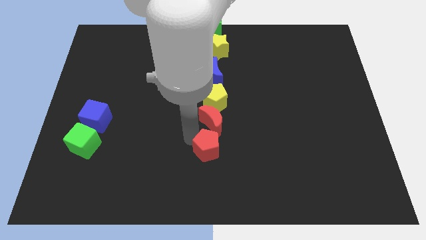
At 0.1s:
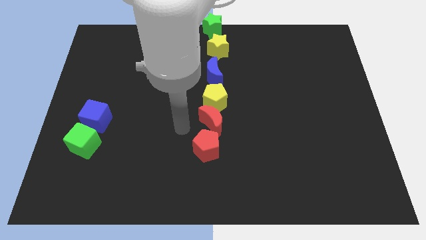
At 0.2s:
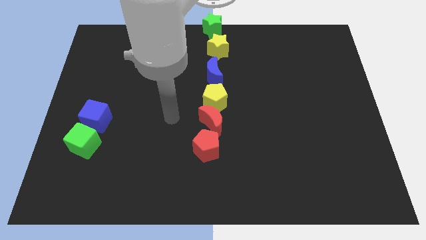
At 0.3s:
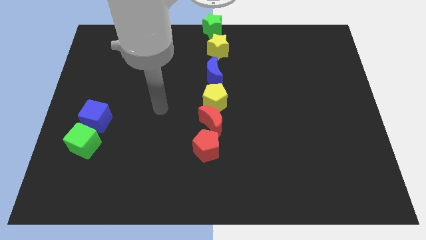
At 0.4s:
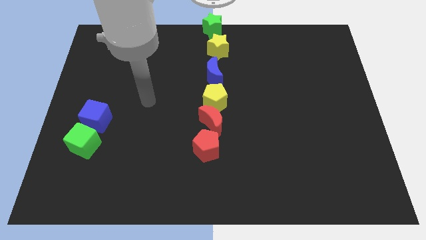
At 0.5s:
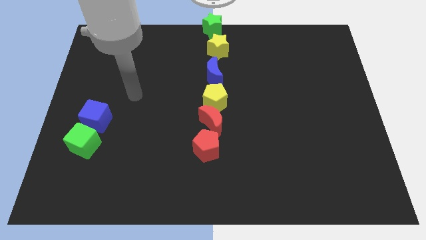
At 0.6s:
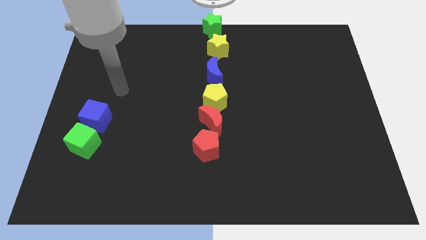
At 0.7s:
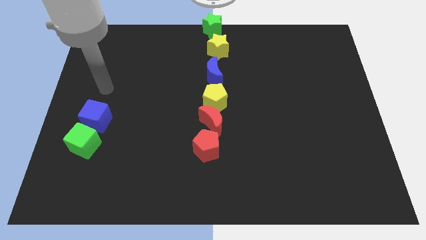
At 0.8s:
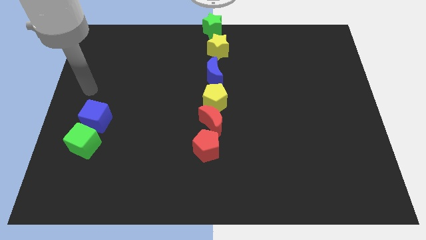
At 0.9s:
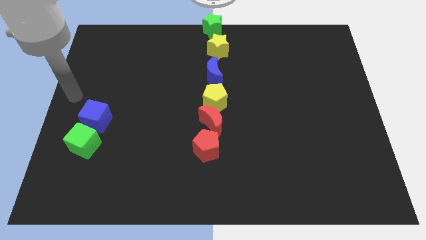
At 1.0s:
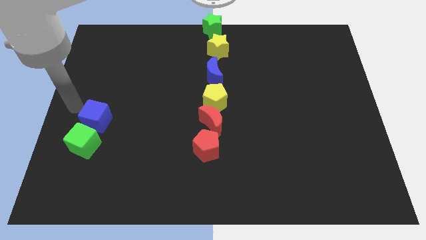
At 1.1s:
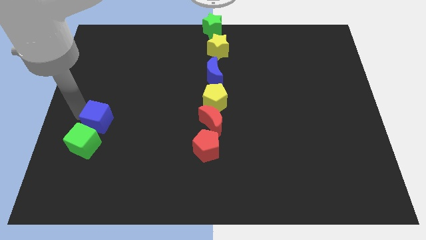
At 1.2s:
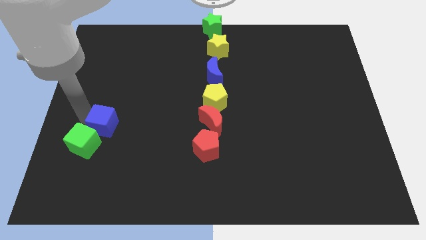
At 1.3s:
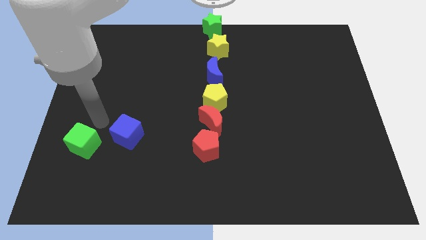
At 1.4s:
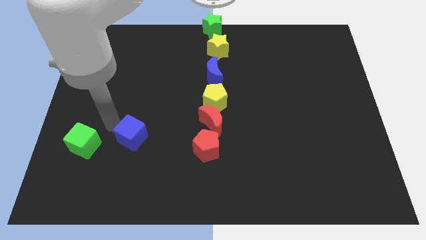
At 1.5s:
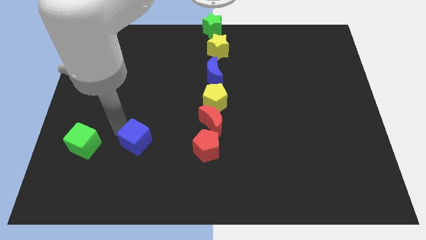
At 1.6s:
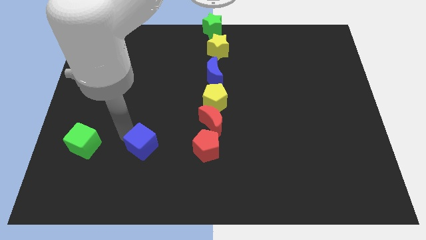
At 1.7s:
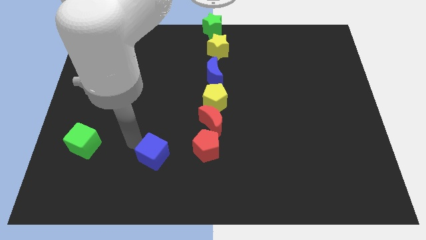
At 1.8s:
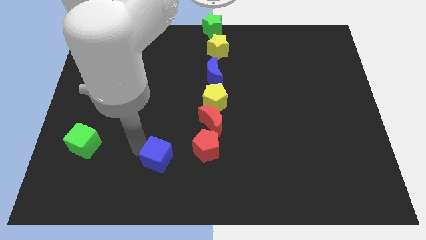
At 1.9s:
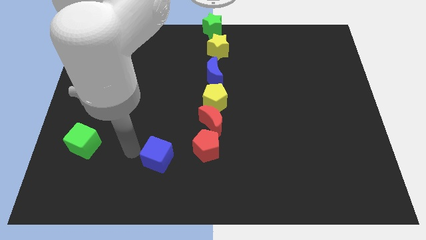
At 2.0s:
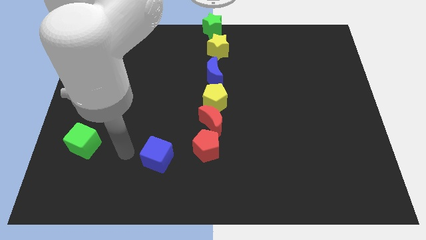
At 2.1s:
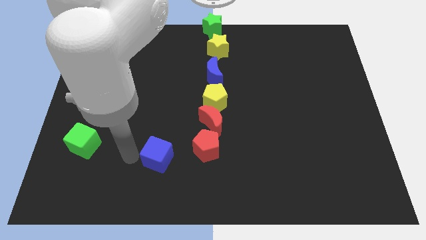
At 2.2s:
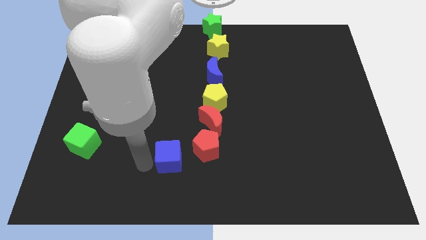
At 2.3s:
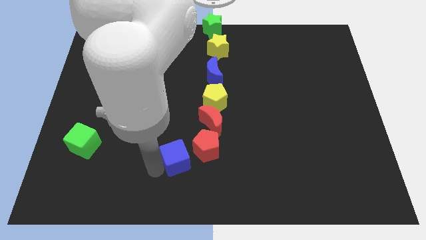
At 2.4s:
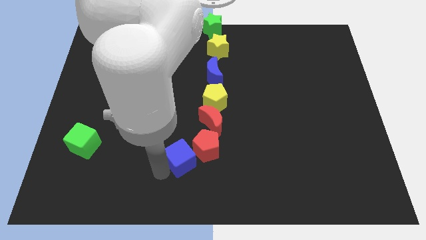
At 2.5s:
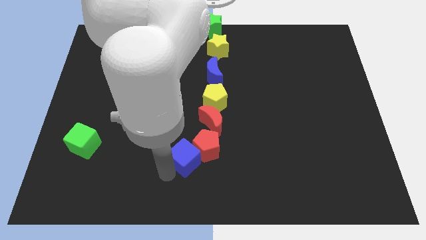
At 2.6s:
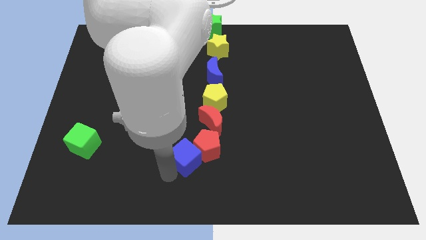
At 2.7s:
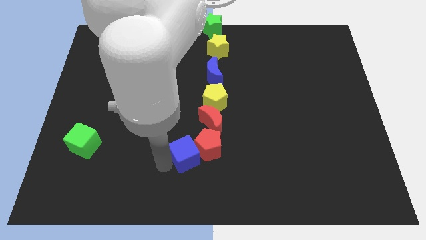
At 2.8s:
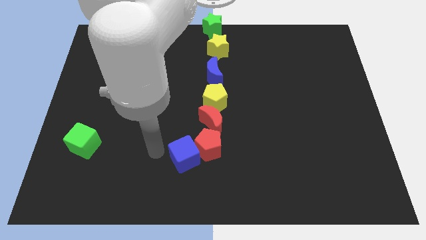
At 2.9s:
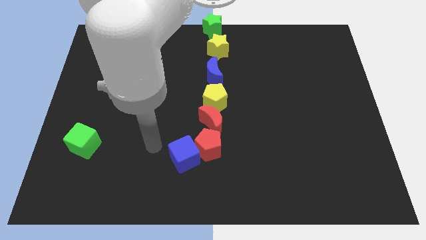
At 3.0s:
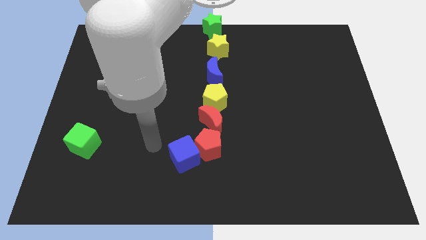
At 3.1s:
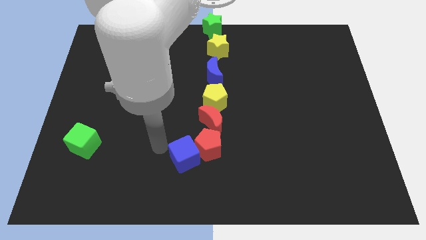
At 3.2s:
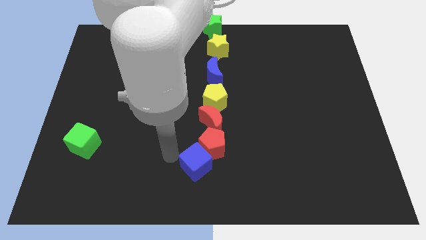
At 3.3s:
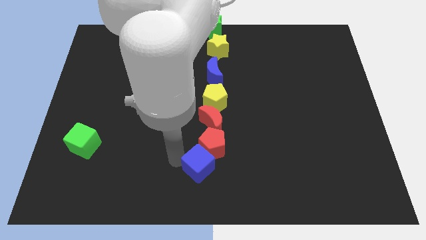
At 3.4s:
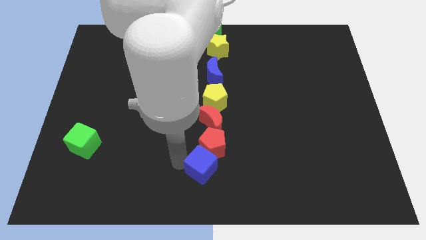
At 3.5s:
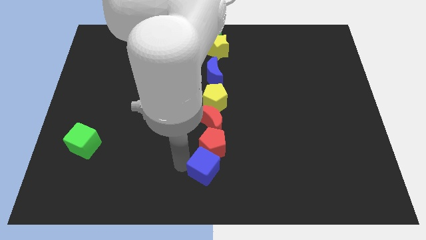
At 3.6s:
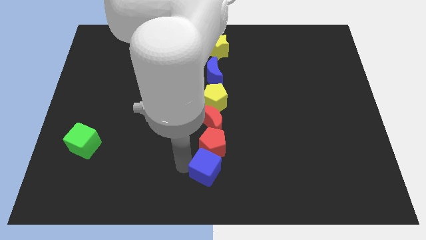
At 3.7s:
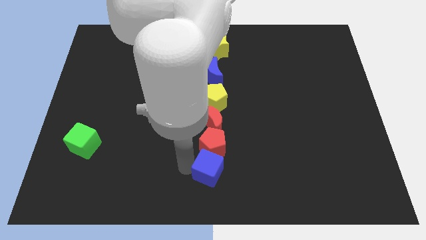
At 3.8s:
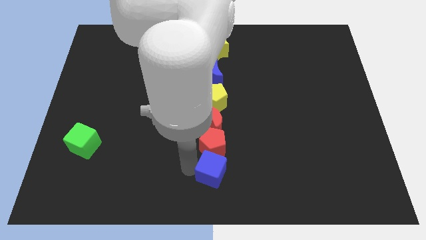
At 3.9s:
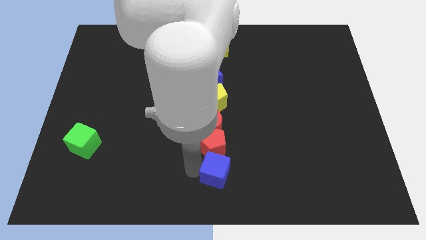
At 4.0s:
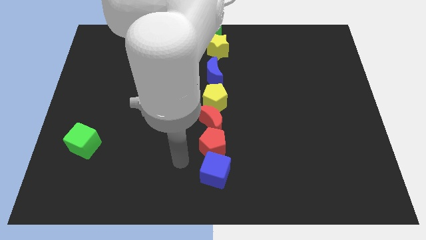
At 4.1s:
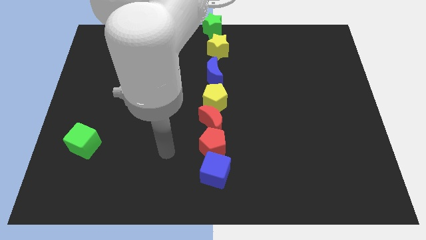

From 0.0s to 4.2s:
place the blue cube at the bottom of red pentagon

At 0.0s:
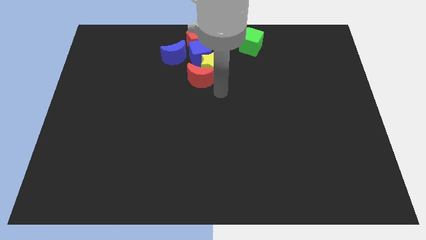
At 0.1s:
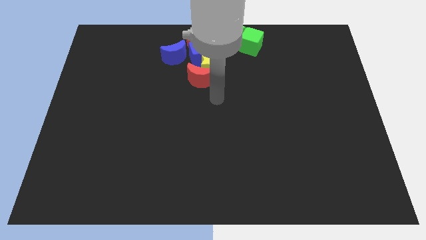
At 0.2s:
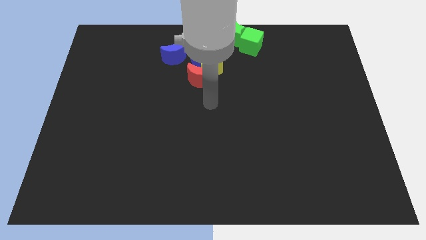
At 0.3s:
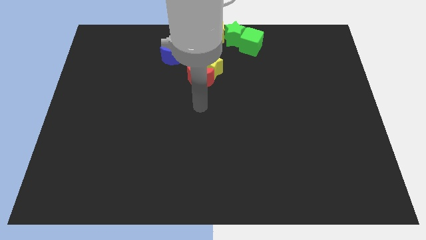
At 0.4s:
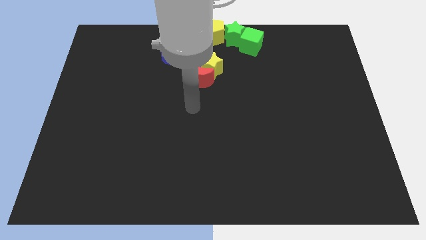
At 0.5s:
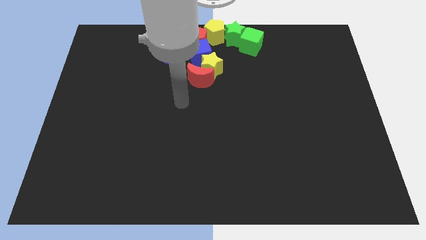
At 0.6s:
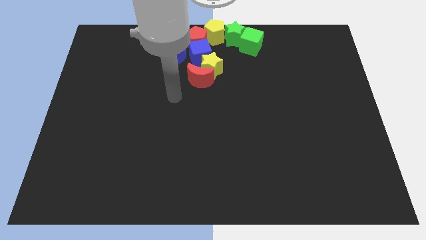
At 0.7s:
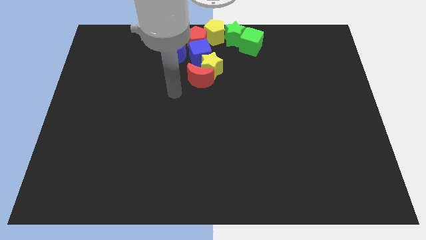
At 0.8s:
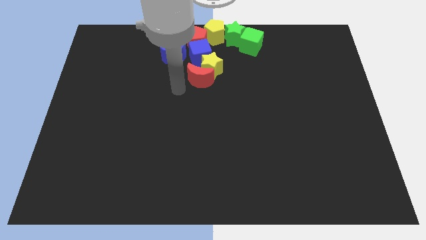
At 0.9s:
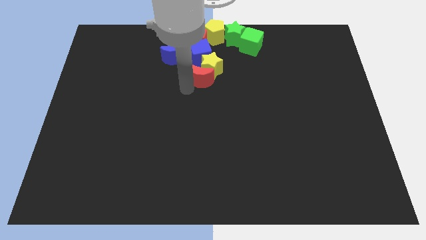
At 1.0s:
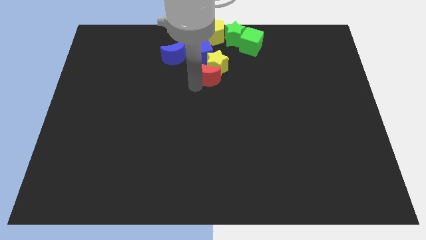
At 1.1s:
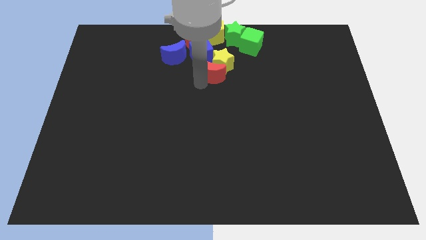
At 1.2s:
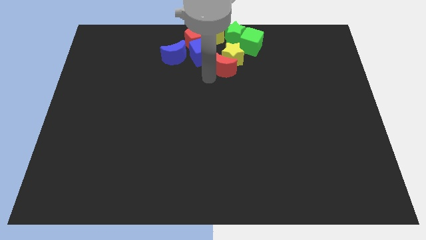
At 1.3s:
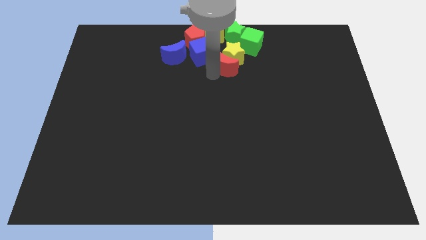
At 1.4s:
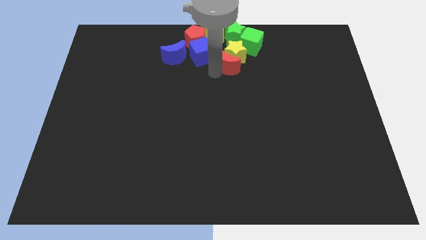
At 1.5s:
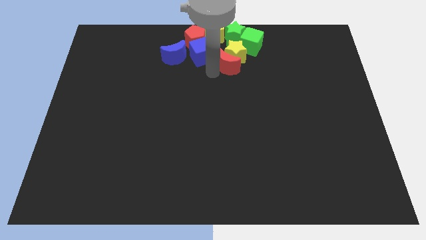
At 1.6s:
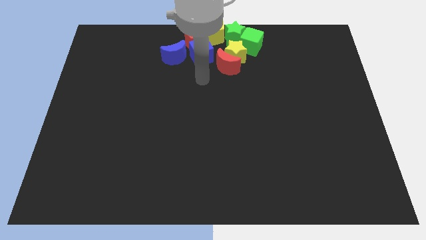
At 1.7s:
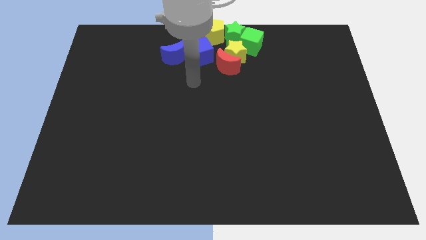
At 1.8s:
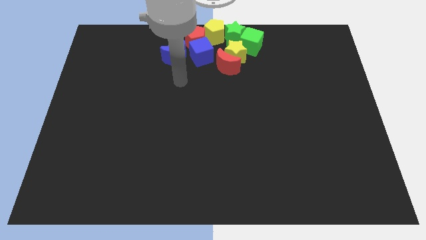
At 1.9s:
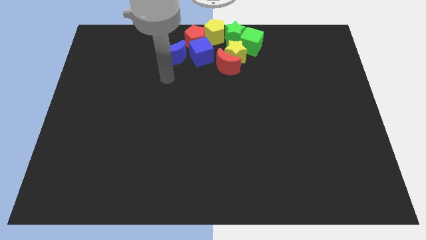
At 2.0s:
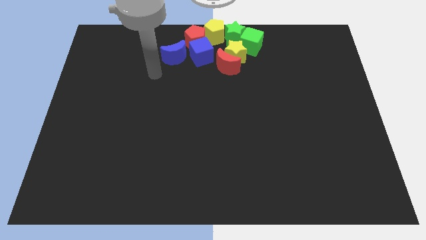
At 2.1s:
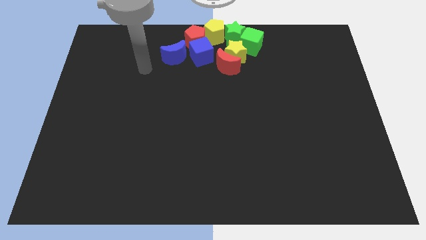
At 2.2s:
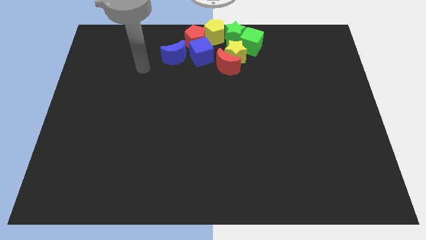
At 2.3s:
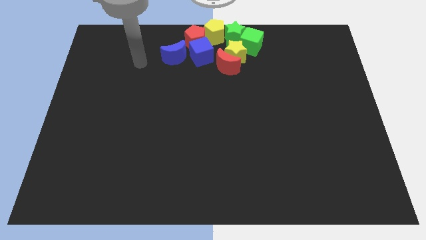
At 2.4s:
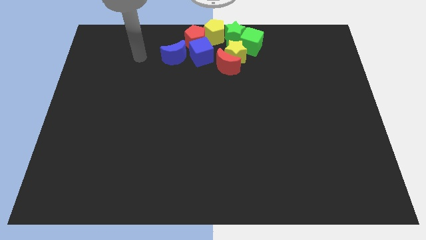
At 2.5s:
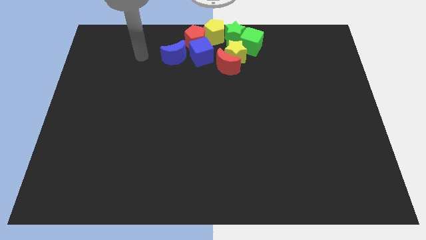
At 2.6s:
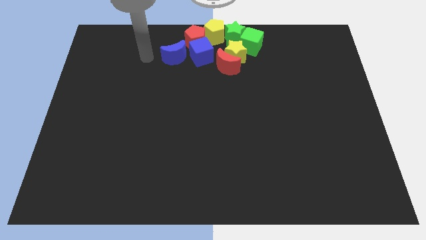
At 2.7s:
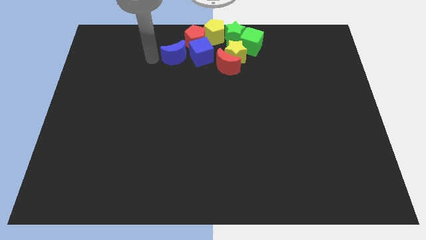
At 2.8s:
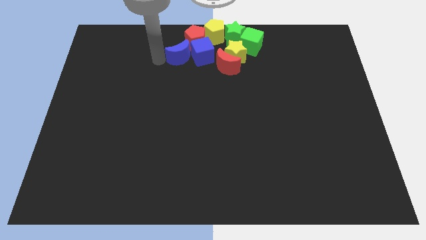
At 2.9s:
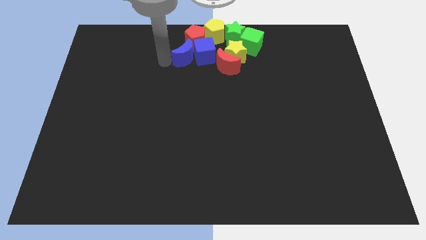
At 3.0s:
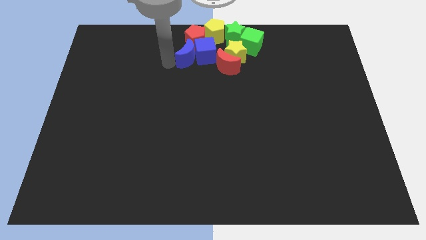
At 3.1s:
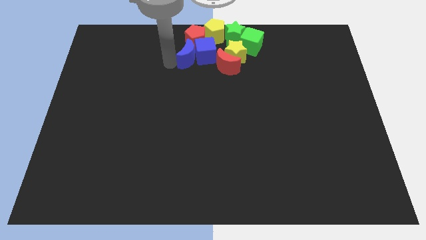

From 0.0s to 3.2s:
push the moons and yellow star towards the group of blocks

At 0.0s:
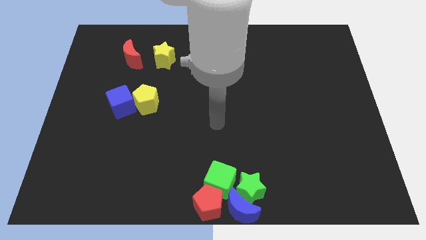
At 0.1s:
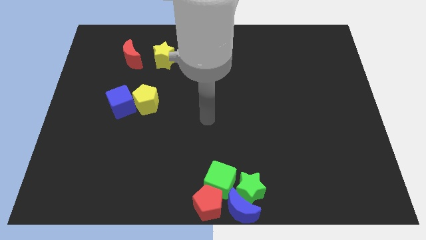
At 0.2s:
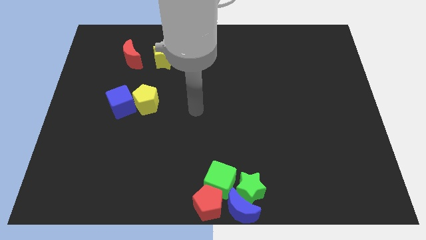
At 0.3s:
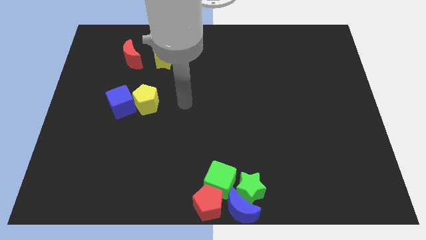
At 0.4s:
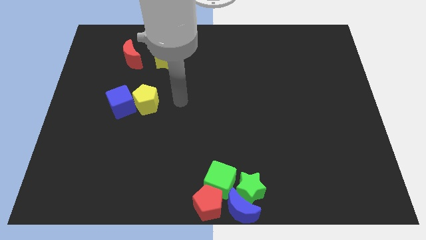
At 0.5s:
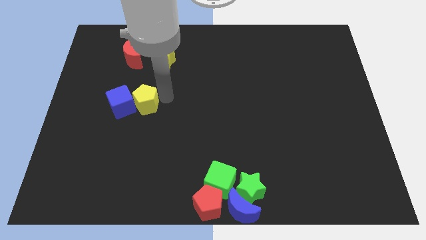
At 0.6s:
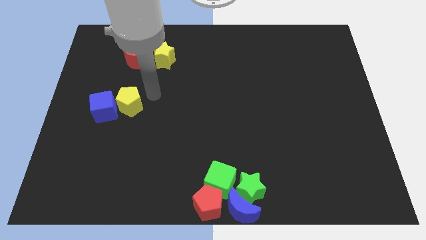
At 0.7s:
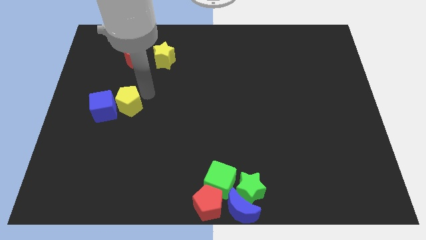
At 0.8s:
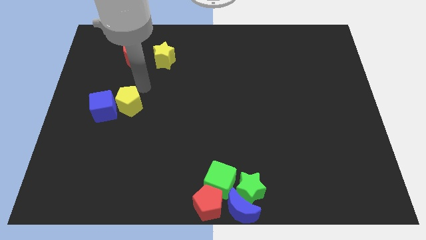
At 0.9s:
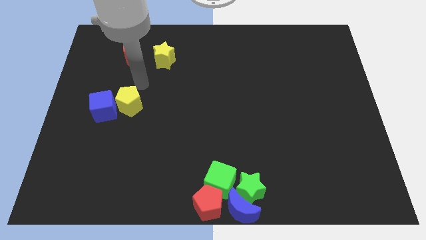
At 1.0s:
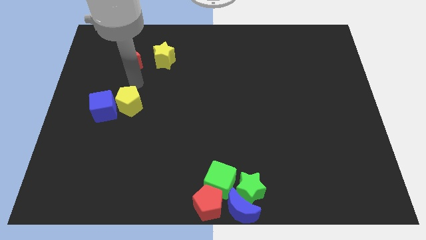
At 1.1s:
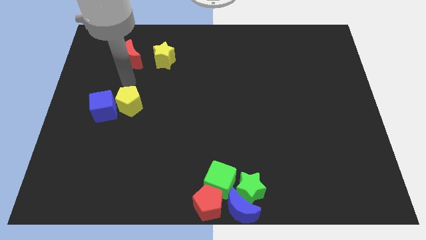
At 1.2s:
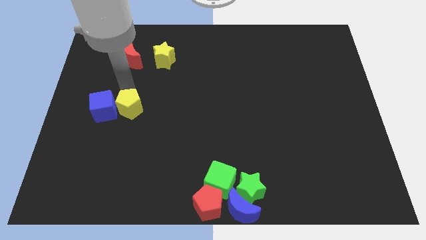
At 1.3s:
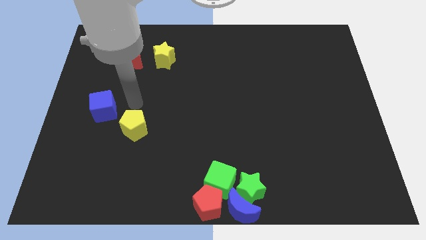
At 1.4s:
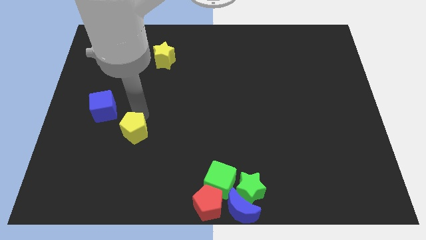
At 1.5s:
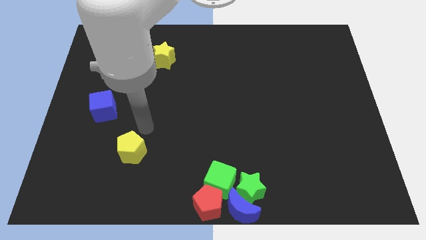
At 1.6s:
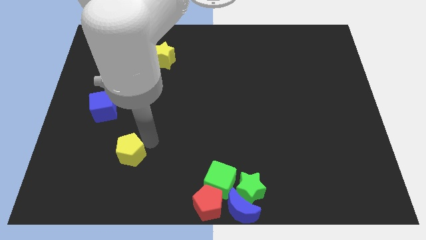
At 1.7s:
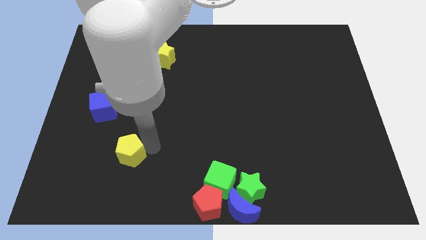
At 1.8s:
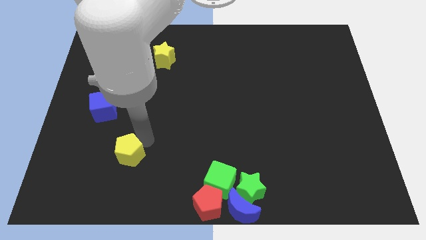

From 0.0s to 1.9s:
separate the yellow pentagon from the blue cube
